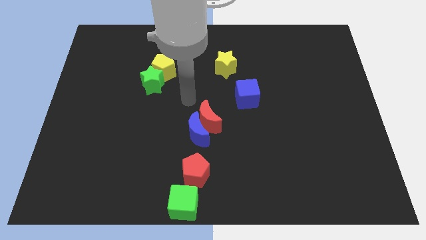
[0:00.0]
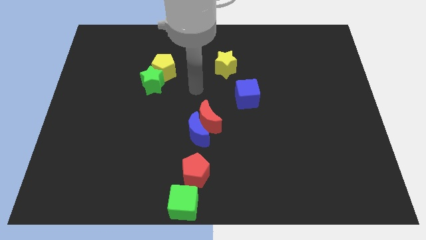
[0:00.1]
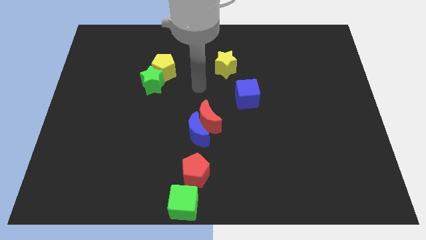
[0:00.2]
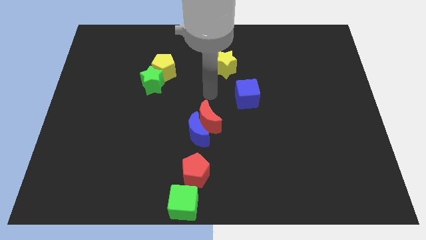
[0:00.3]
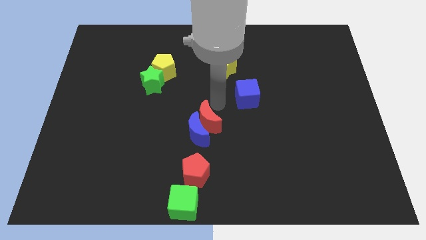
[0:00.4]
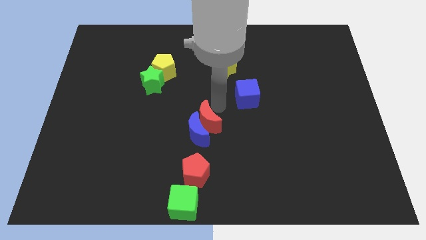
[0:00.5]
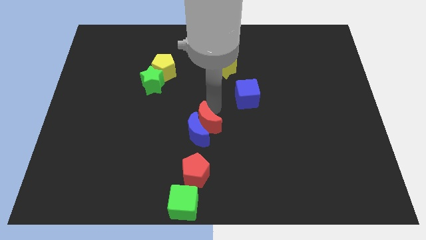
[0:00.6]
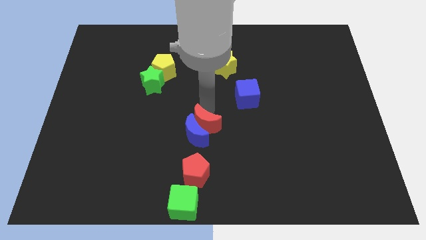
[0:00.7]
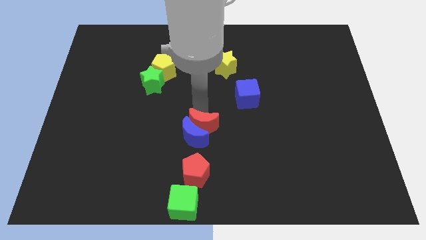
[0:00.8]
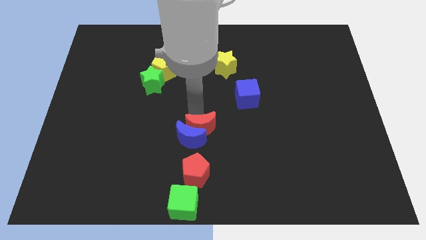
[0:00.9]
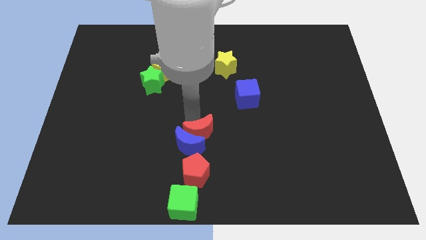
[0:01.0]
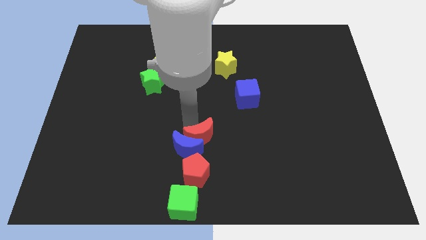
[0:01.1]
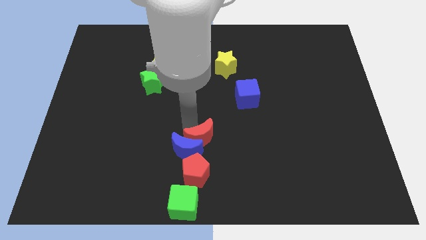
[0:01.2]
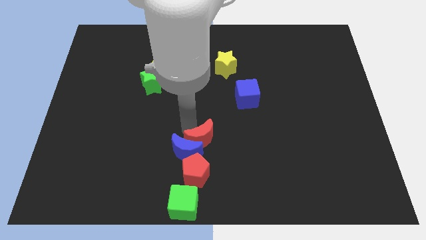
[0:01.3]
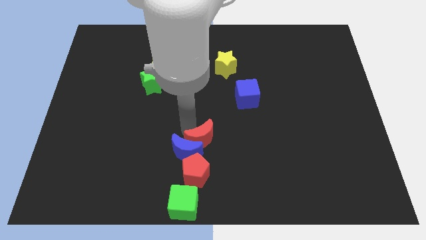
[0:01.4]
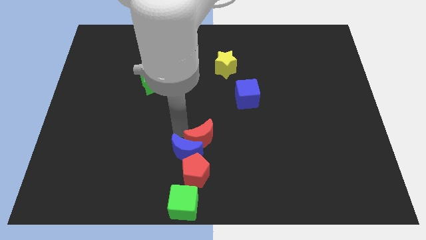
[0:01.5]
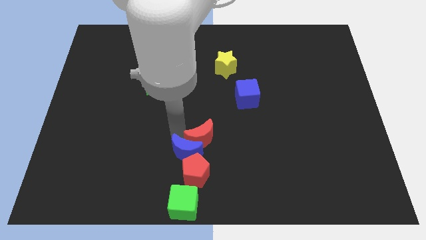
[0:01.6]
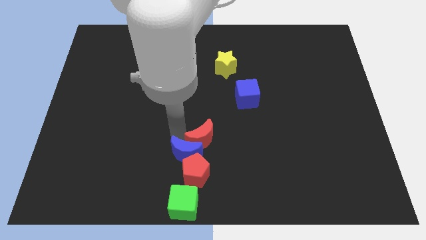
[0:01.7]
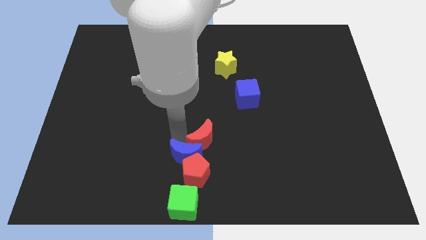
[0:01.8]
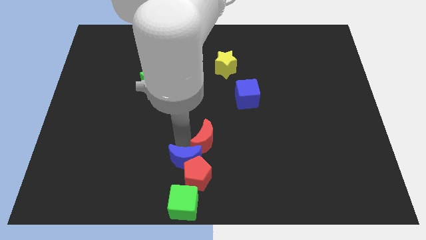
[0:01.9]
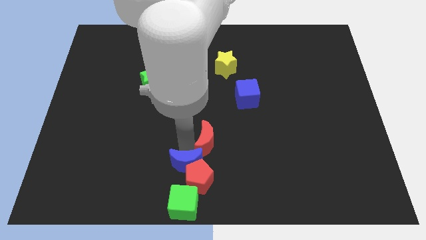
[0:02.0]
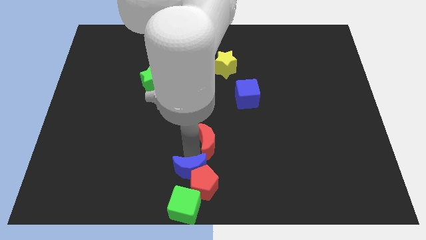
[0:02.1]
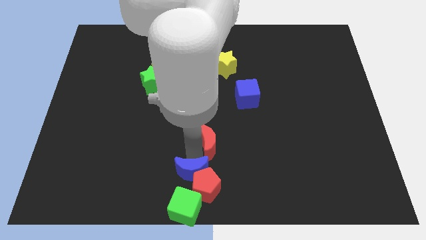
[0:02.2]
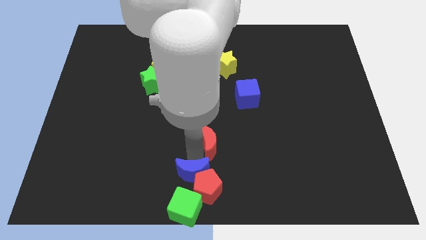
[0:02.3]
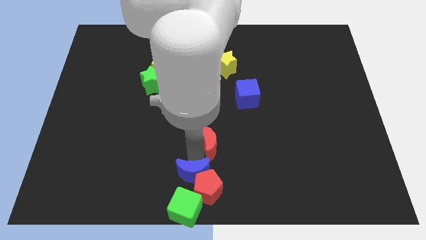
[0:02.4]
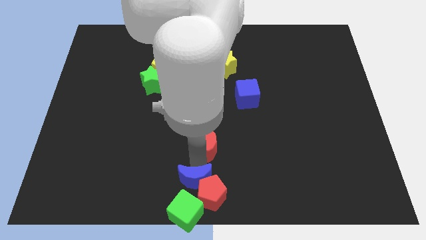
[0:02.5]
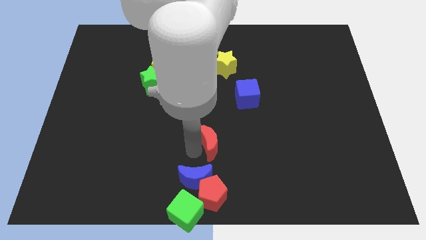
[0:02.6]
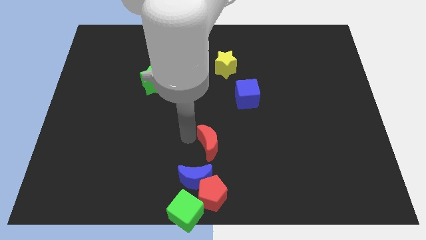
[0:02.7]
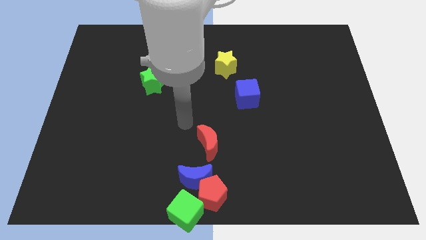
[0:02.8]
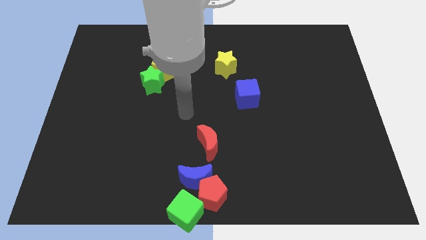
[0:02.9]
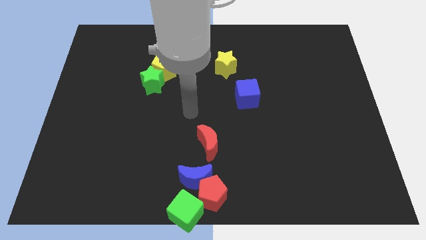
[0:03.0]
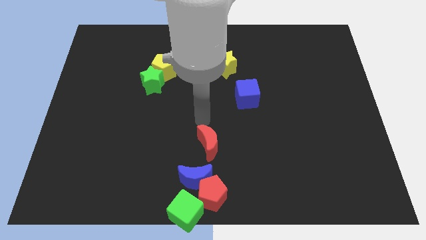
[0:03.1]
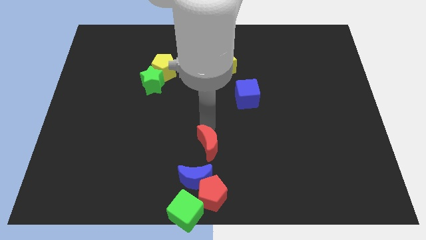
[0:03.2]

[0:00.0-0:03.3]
separate red crescent and the blue crescent

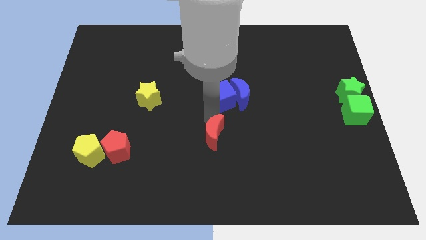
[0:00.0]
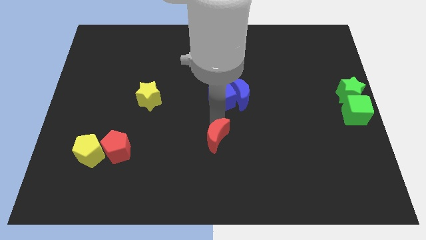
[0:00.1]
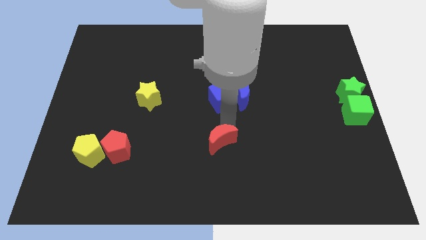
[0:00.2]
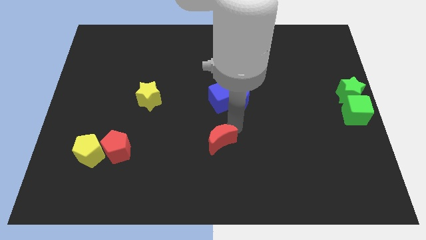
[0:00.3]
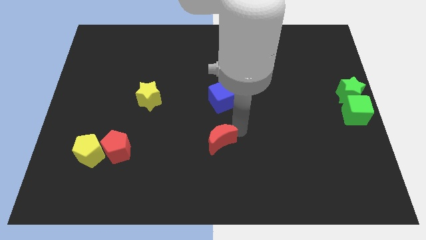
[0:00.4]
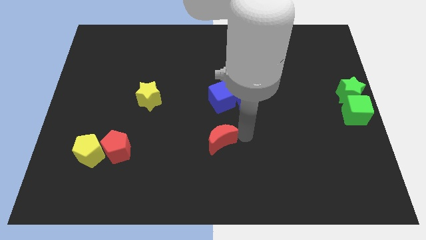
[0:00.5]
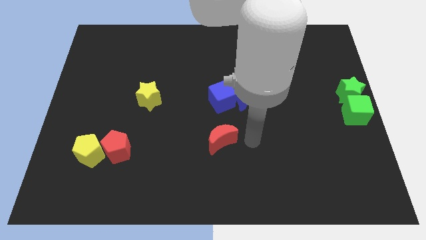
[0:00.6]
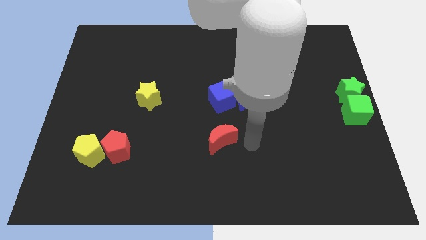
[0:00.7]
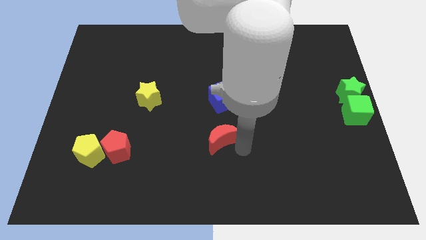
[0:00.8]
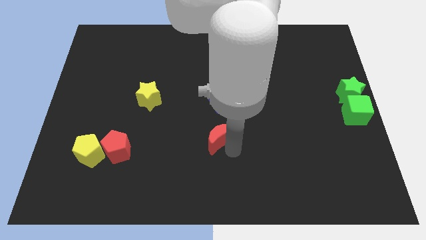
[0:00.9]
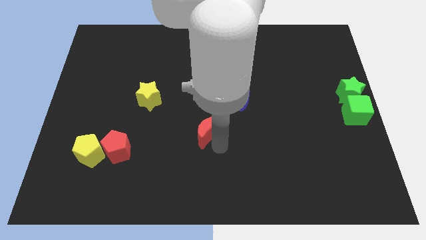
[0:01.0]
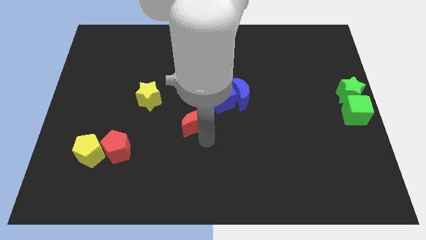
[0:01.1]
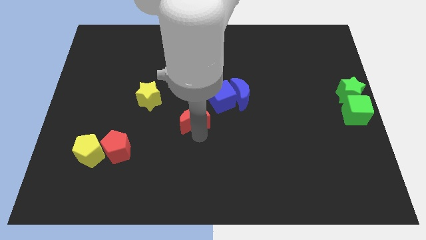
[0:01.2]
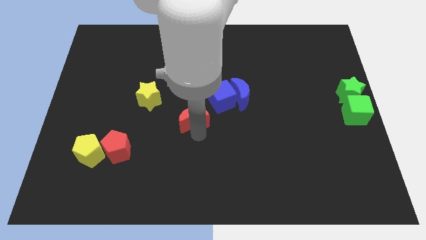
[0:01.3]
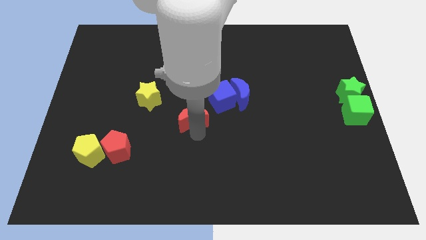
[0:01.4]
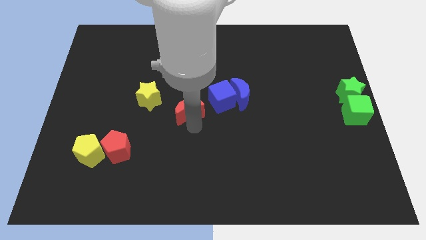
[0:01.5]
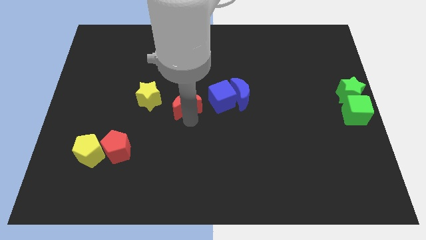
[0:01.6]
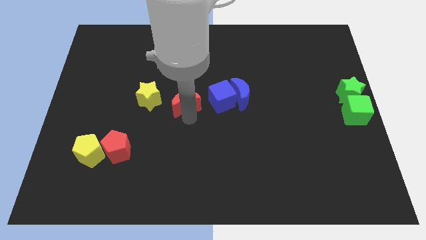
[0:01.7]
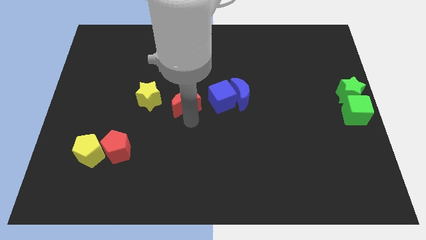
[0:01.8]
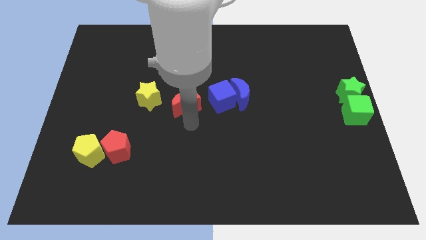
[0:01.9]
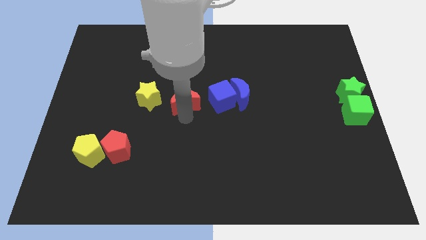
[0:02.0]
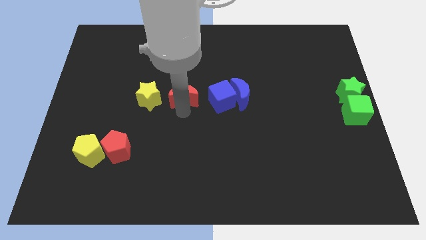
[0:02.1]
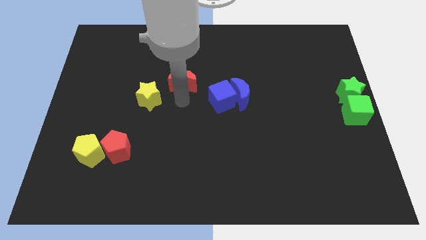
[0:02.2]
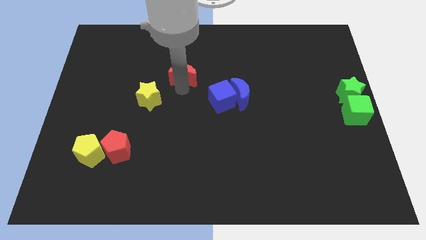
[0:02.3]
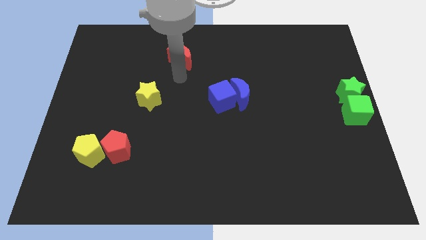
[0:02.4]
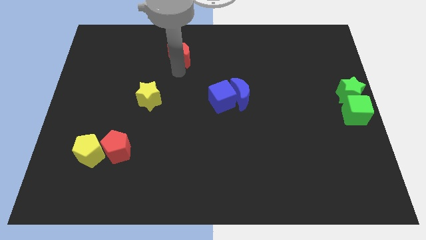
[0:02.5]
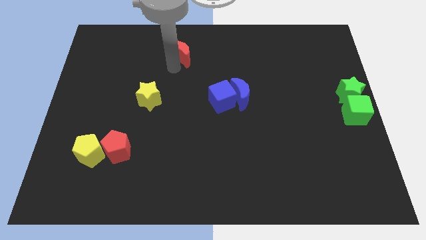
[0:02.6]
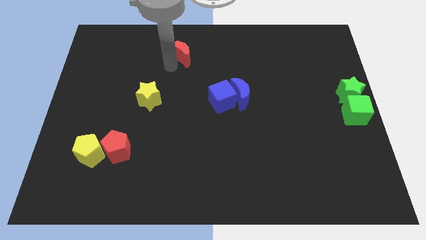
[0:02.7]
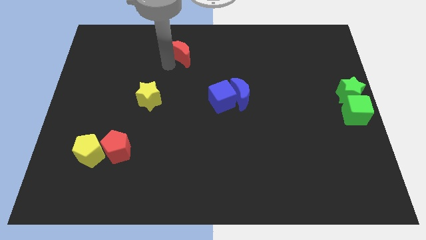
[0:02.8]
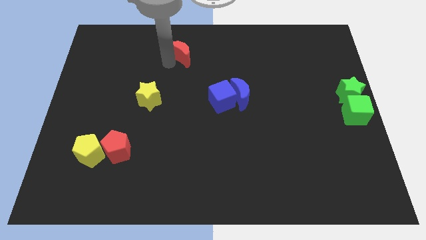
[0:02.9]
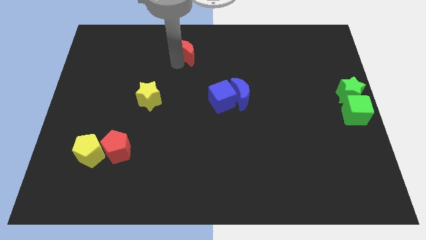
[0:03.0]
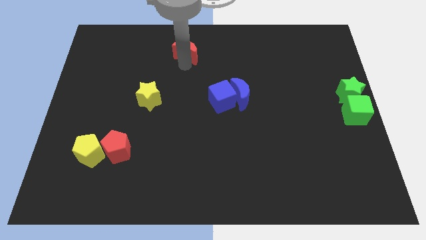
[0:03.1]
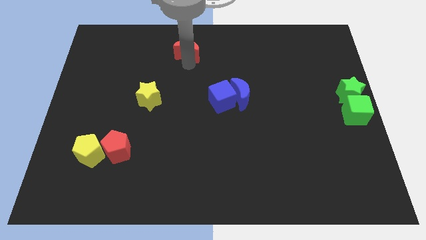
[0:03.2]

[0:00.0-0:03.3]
move the red moon into the top middle of the board

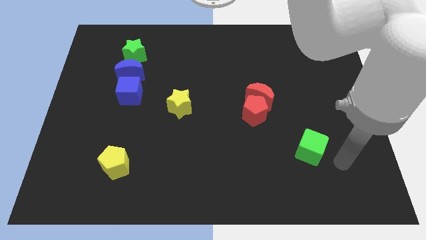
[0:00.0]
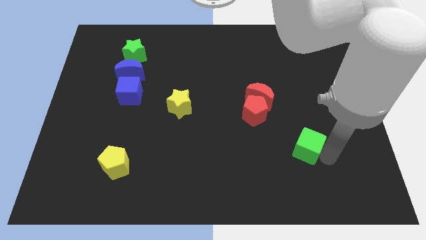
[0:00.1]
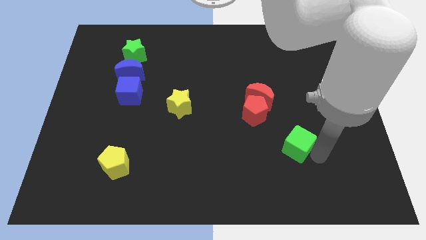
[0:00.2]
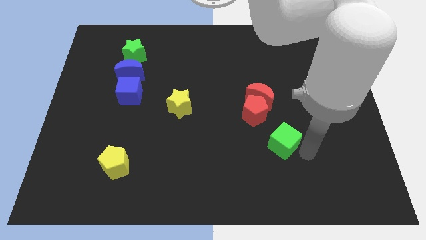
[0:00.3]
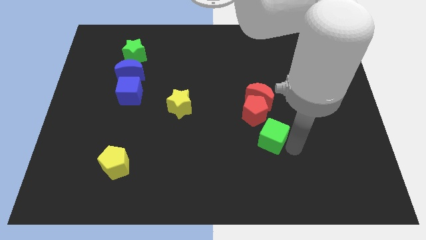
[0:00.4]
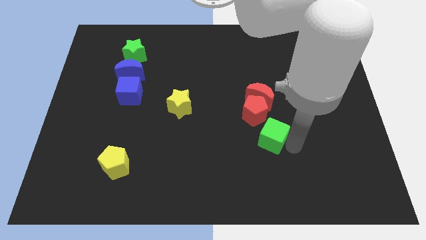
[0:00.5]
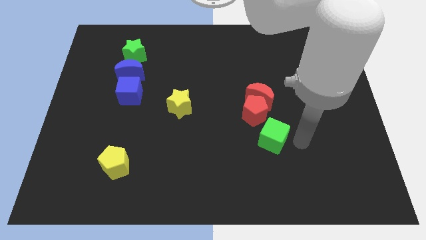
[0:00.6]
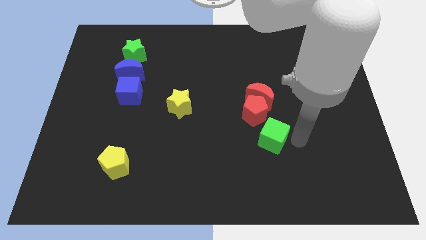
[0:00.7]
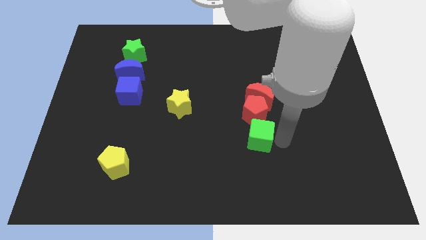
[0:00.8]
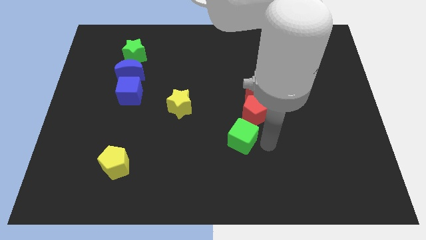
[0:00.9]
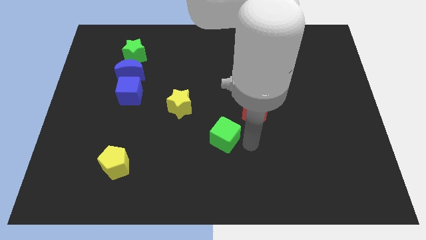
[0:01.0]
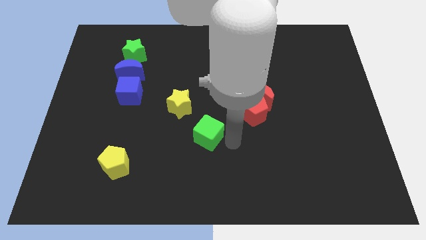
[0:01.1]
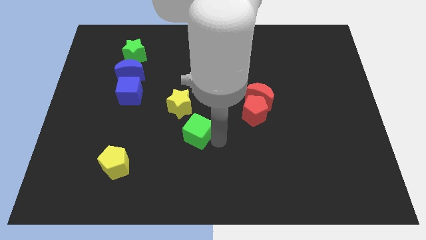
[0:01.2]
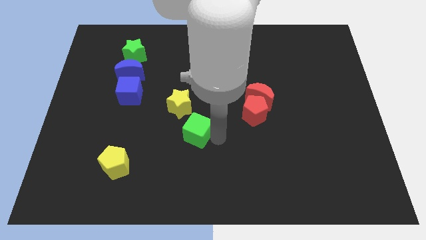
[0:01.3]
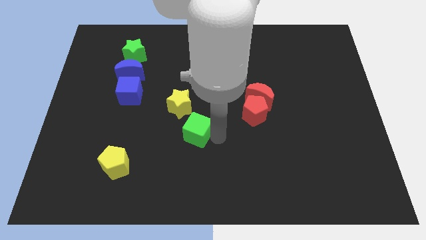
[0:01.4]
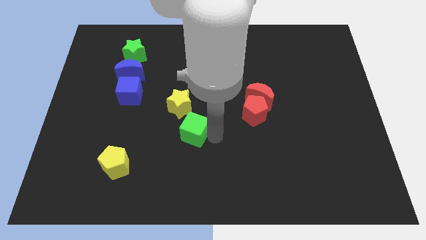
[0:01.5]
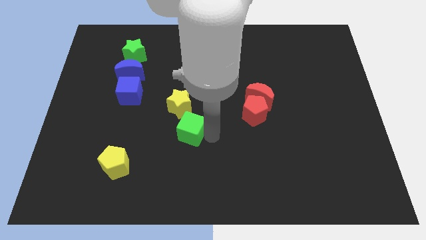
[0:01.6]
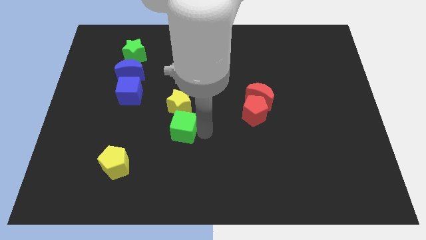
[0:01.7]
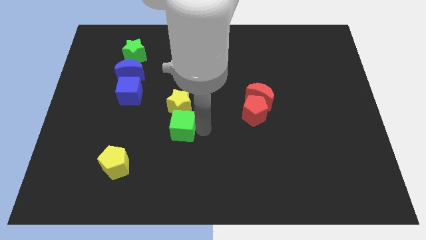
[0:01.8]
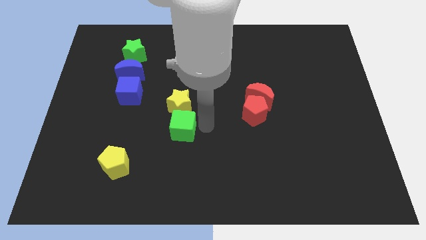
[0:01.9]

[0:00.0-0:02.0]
place the green cube below the yellow star

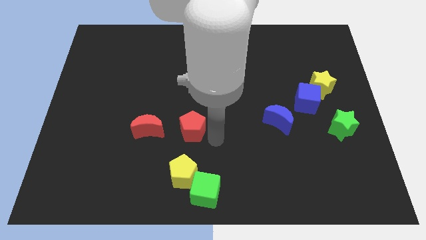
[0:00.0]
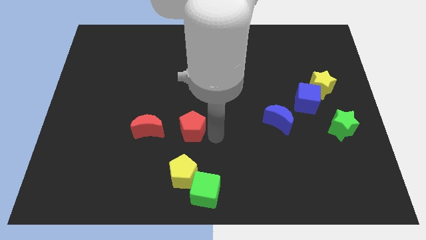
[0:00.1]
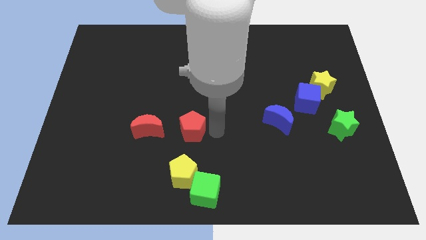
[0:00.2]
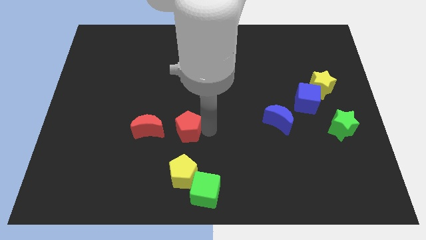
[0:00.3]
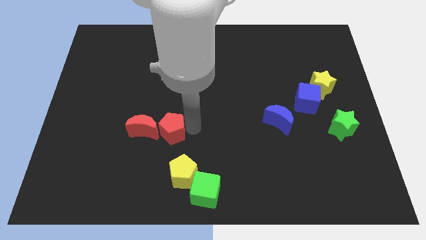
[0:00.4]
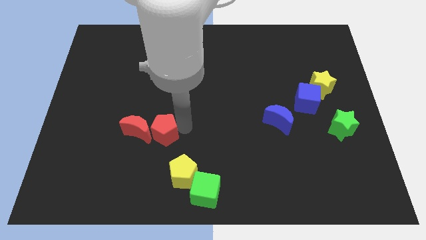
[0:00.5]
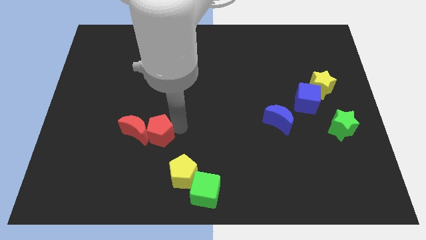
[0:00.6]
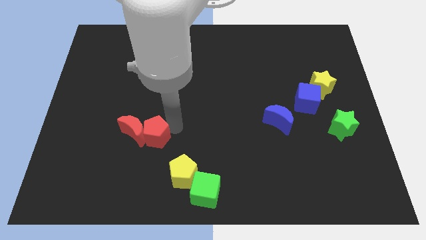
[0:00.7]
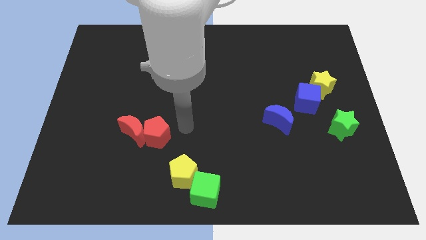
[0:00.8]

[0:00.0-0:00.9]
push the red pentagon into red crescent
